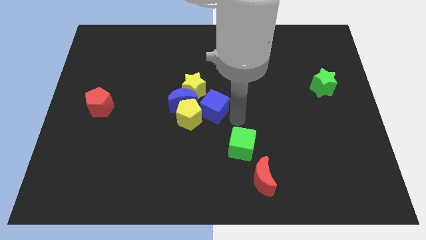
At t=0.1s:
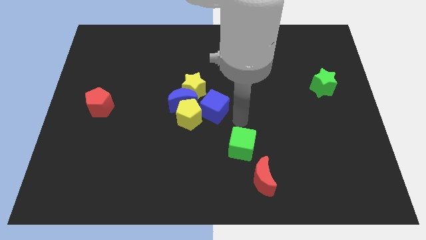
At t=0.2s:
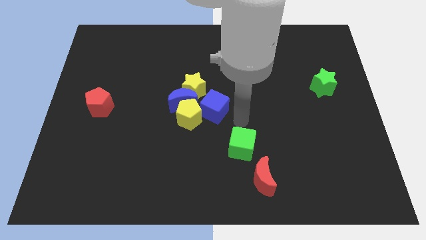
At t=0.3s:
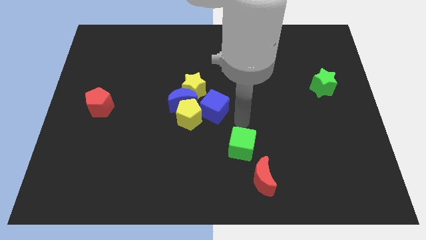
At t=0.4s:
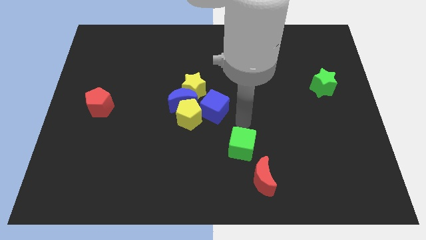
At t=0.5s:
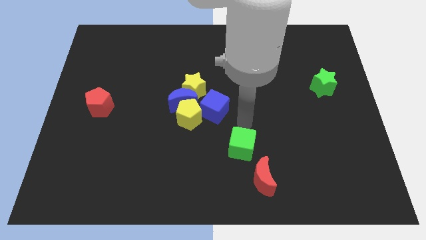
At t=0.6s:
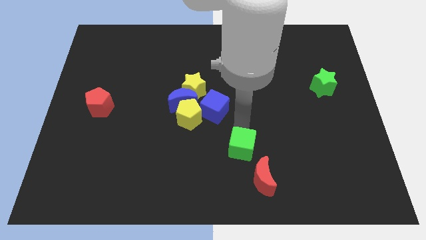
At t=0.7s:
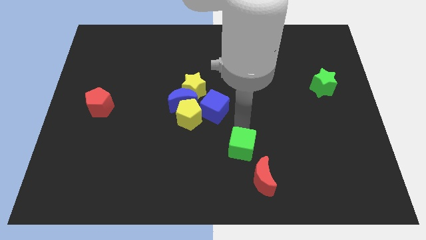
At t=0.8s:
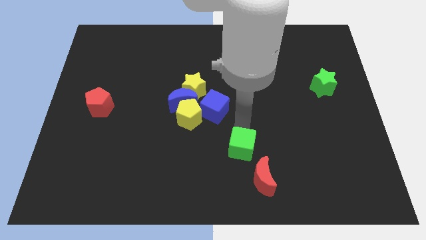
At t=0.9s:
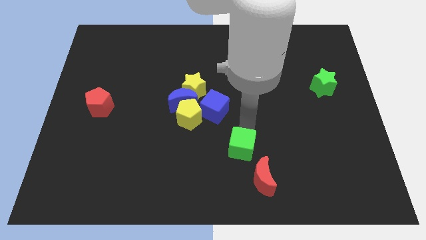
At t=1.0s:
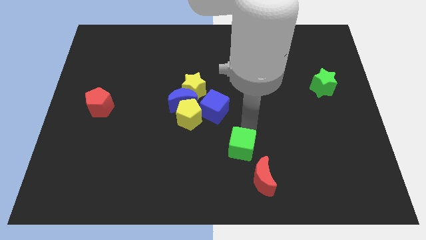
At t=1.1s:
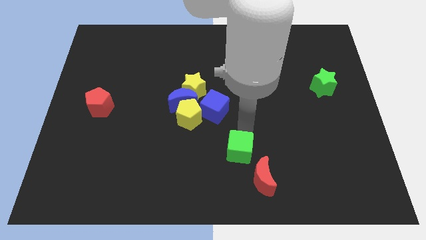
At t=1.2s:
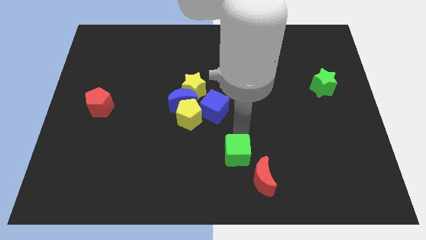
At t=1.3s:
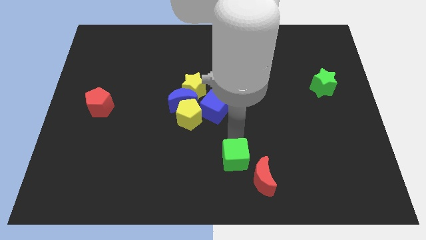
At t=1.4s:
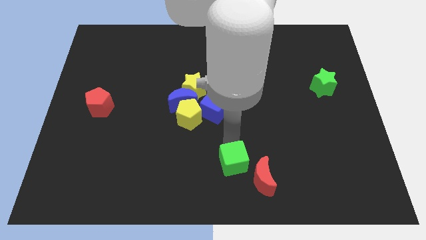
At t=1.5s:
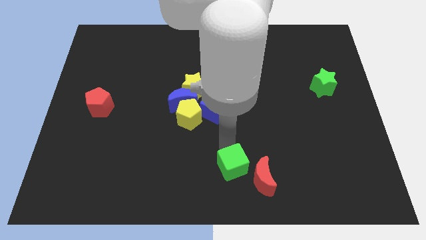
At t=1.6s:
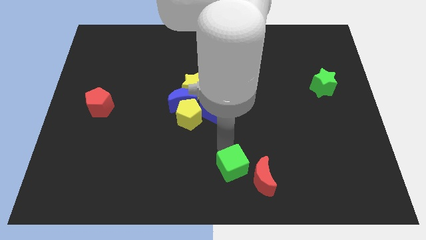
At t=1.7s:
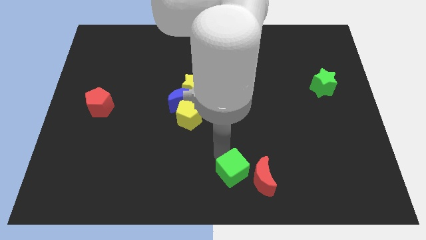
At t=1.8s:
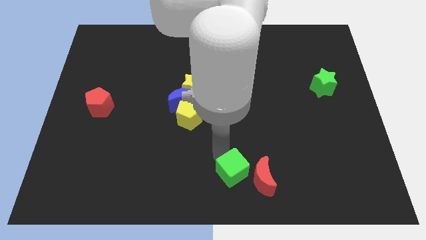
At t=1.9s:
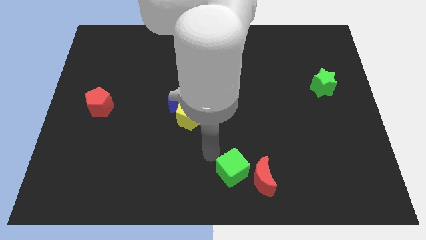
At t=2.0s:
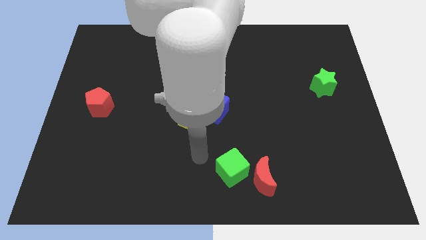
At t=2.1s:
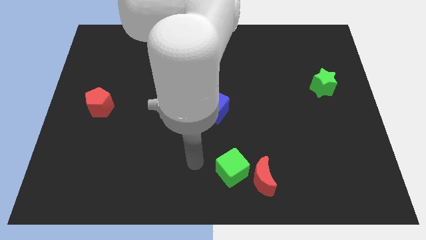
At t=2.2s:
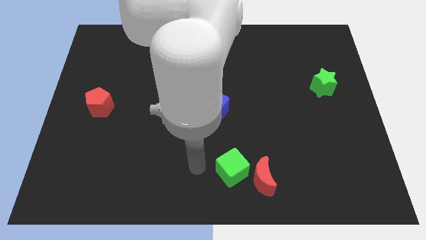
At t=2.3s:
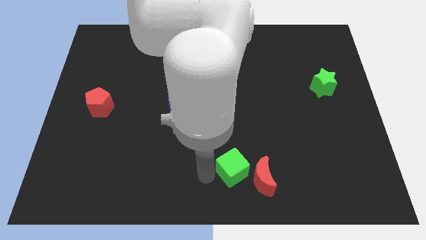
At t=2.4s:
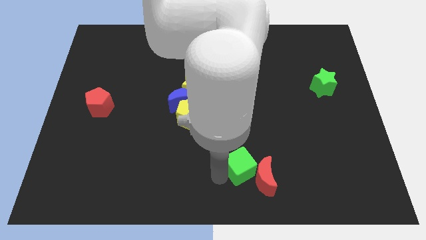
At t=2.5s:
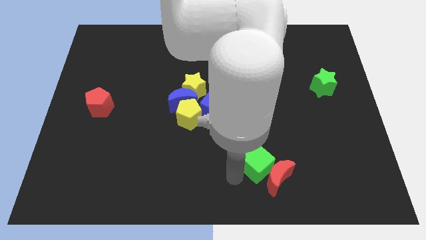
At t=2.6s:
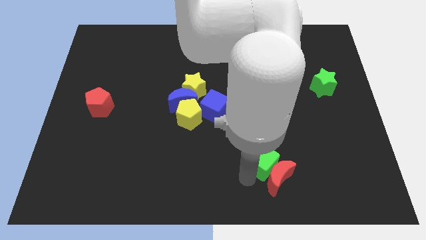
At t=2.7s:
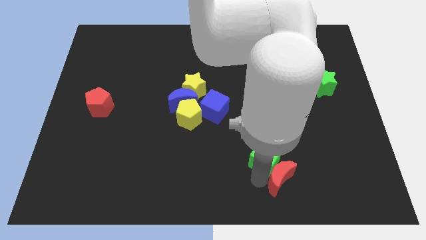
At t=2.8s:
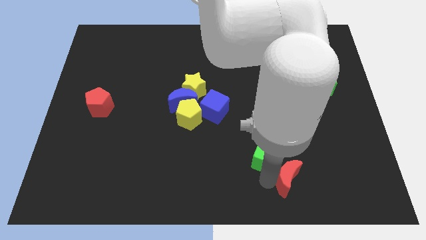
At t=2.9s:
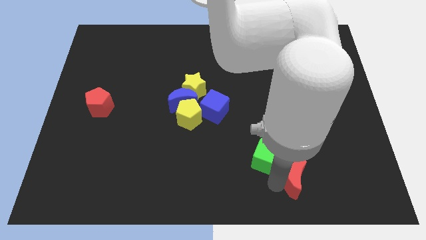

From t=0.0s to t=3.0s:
move the green cube to the top left of the red crescent

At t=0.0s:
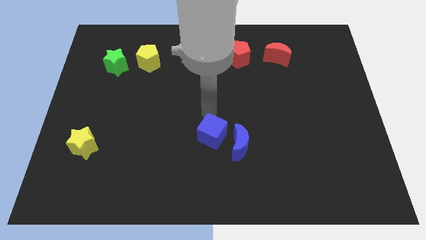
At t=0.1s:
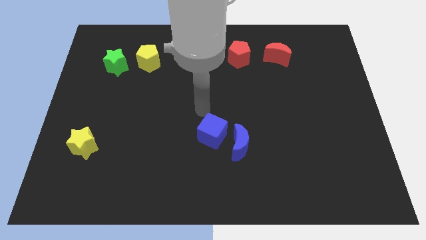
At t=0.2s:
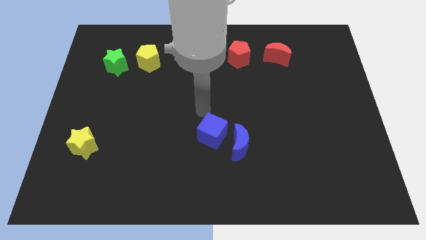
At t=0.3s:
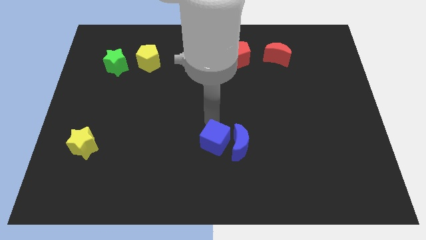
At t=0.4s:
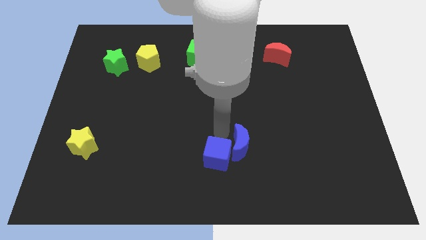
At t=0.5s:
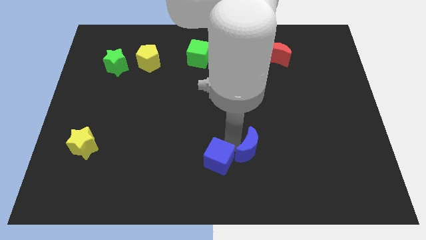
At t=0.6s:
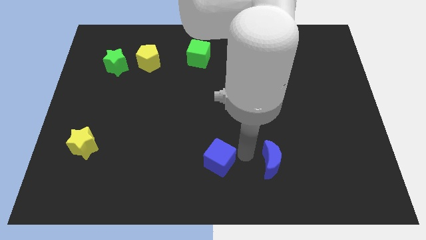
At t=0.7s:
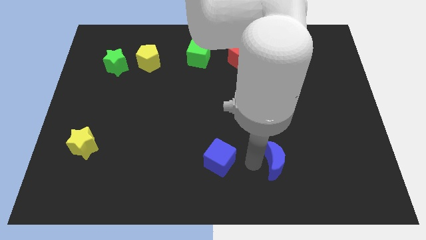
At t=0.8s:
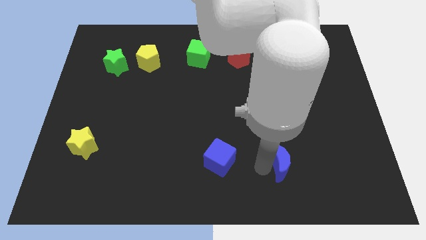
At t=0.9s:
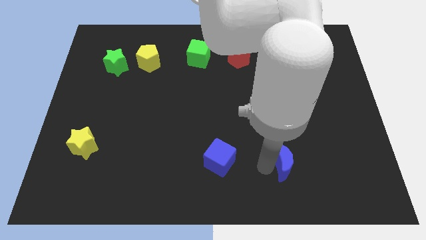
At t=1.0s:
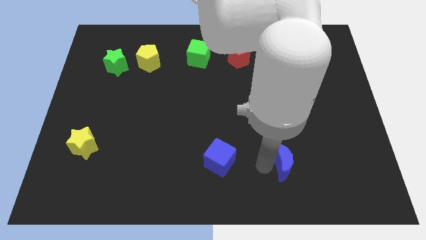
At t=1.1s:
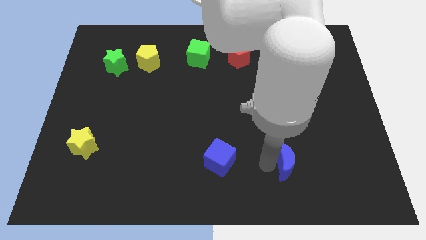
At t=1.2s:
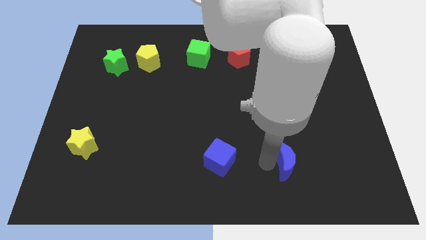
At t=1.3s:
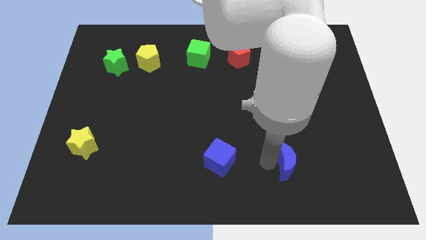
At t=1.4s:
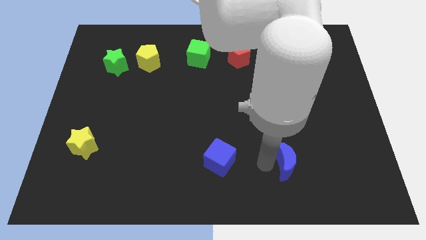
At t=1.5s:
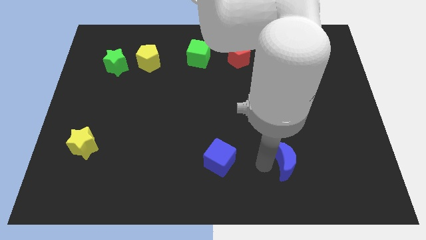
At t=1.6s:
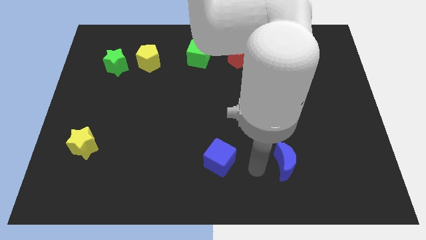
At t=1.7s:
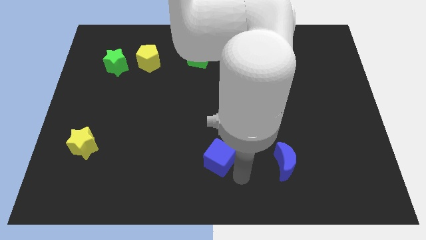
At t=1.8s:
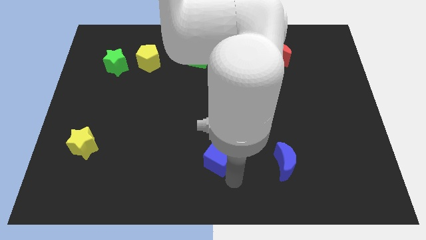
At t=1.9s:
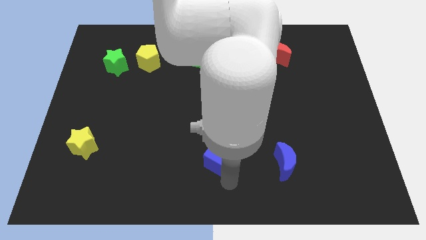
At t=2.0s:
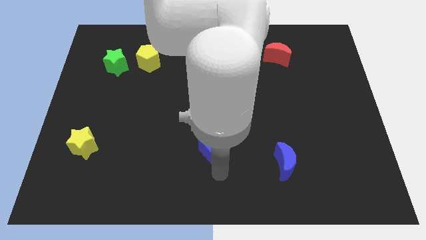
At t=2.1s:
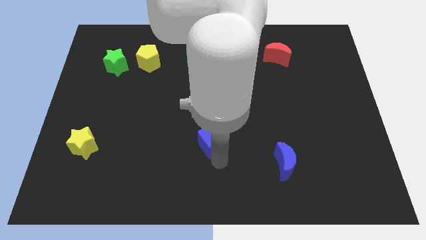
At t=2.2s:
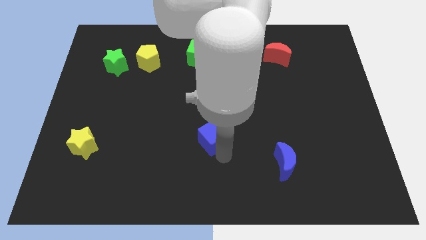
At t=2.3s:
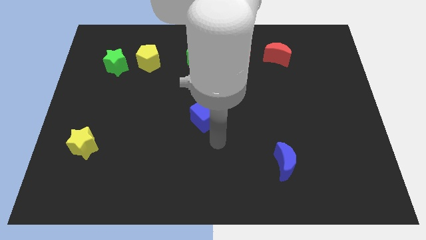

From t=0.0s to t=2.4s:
separate the blue moon from the blue cube

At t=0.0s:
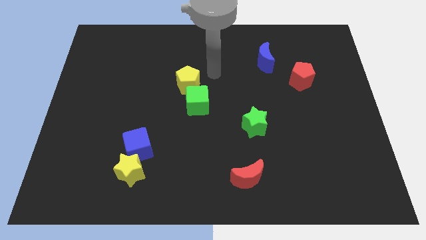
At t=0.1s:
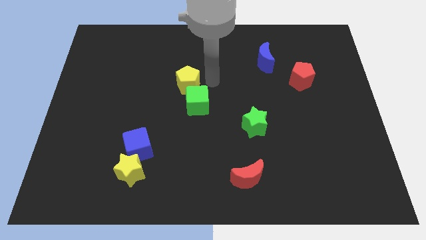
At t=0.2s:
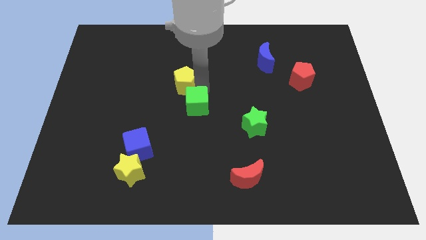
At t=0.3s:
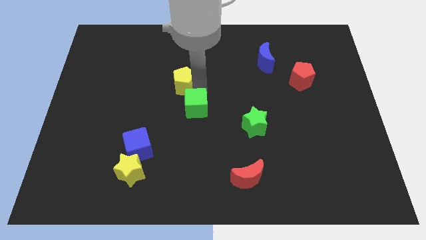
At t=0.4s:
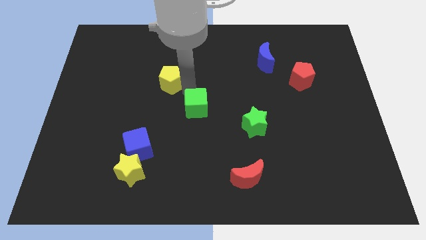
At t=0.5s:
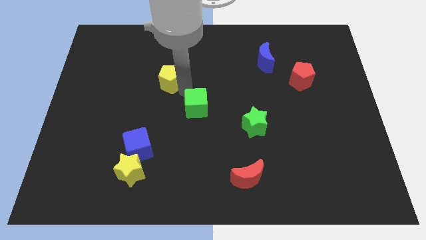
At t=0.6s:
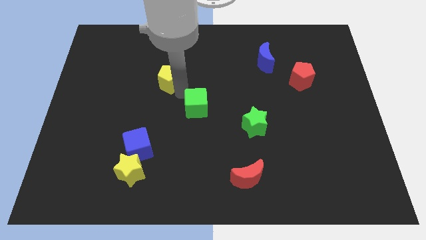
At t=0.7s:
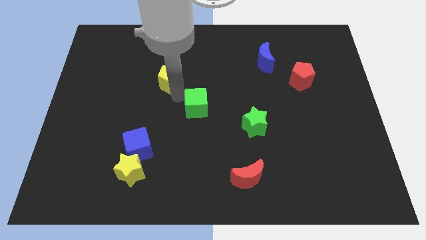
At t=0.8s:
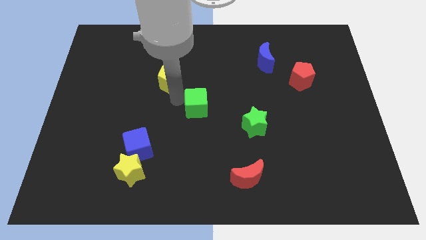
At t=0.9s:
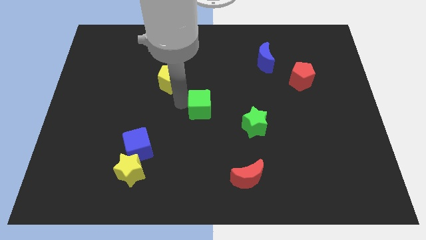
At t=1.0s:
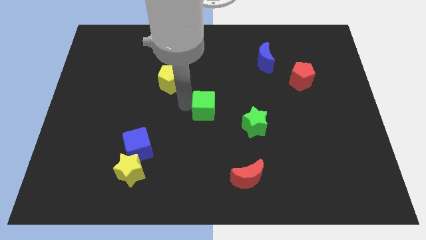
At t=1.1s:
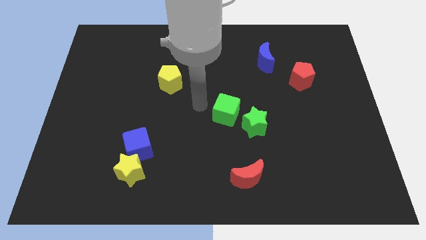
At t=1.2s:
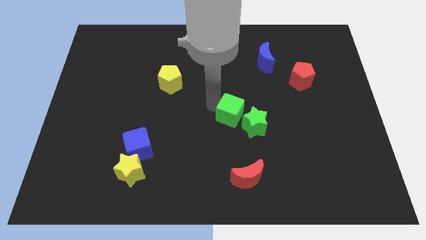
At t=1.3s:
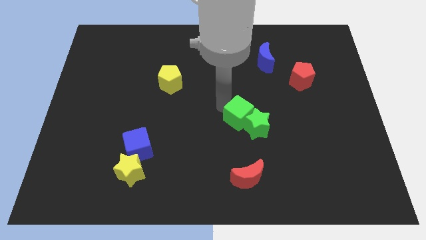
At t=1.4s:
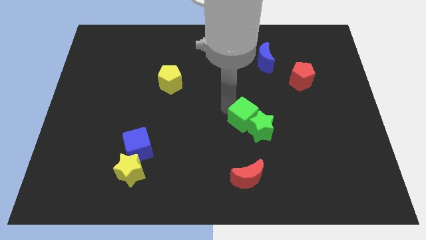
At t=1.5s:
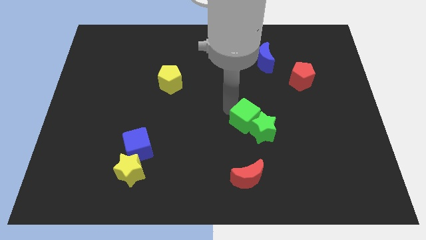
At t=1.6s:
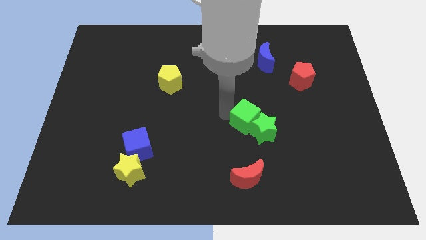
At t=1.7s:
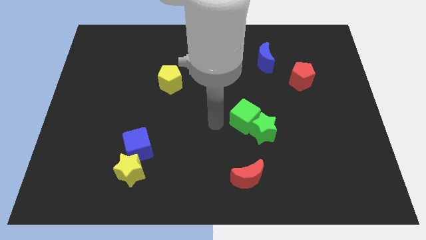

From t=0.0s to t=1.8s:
move the green cube into the green star

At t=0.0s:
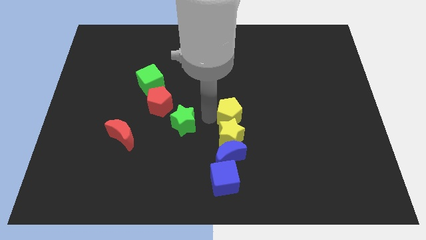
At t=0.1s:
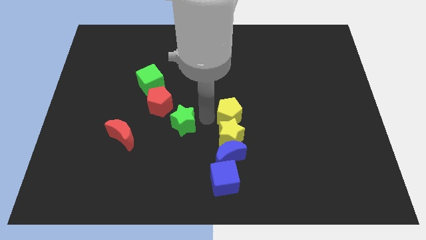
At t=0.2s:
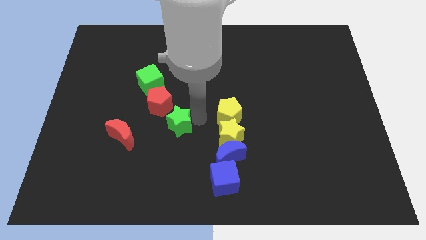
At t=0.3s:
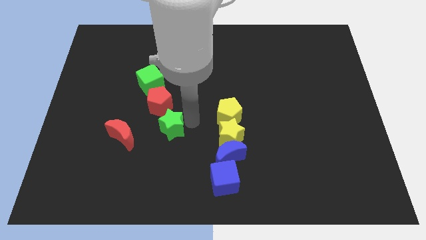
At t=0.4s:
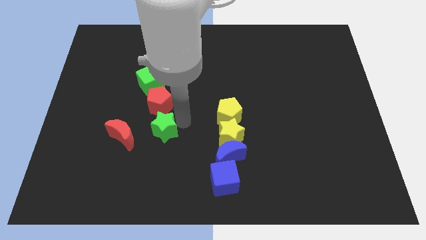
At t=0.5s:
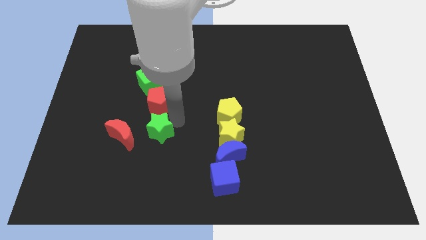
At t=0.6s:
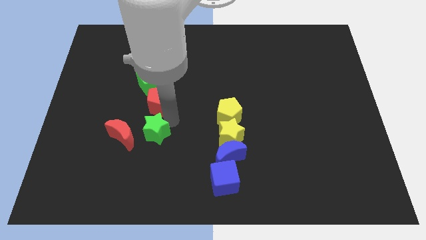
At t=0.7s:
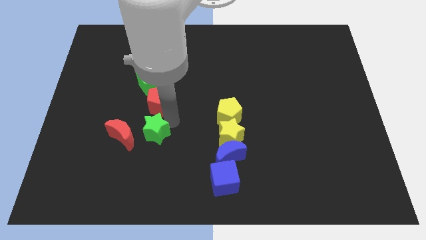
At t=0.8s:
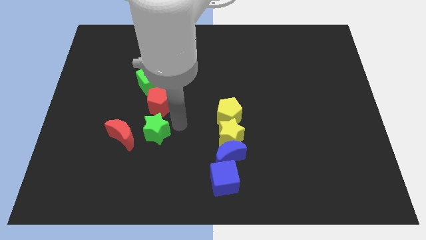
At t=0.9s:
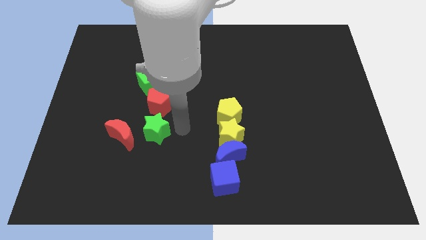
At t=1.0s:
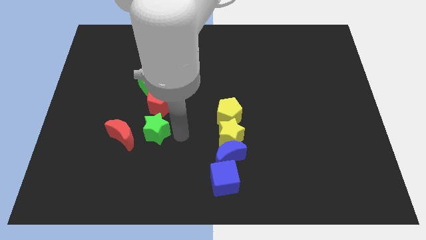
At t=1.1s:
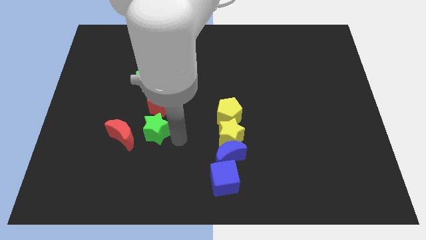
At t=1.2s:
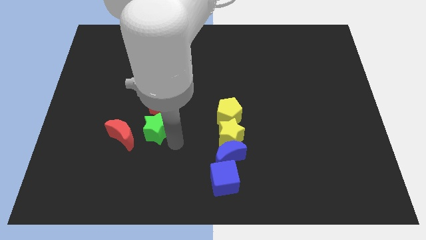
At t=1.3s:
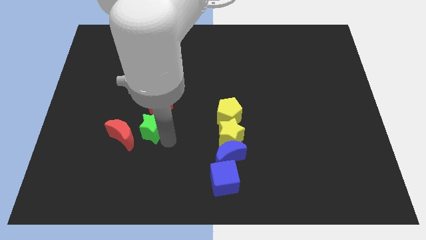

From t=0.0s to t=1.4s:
push the green star to the bottom of the red pentagon

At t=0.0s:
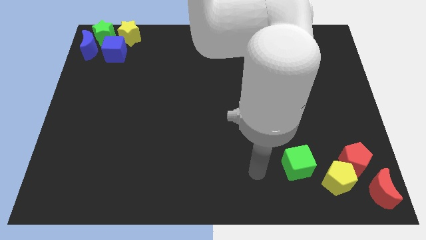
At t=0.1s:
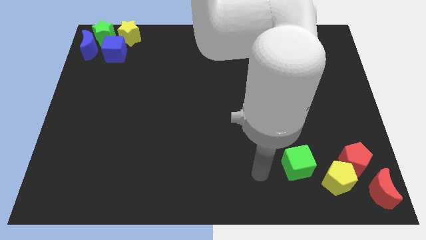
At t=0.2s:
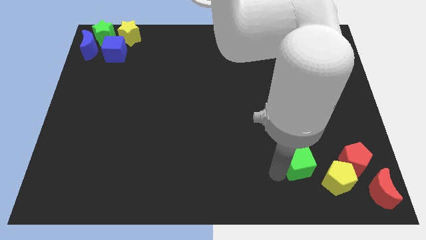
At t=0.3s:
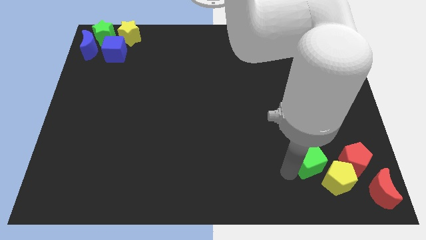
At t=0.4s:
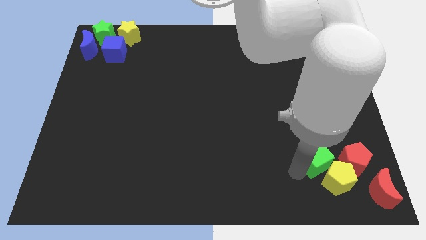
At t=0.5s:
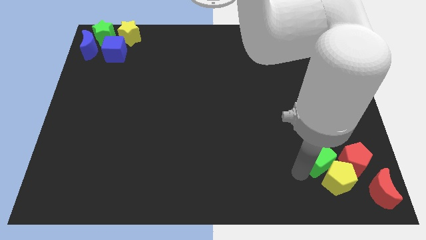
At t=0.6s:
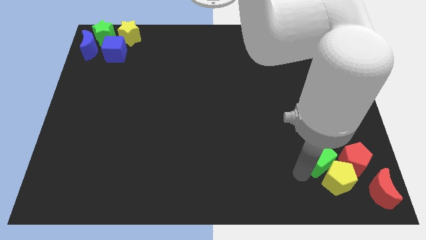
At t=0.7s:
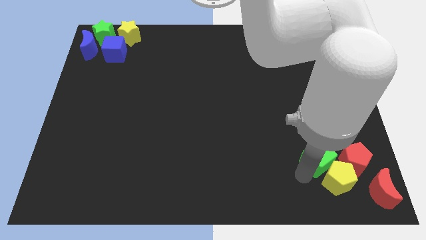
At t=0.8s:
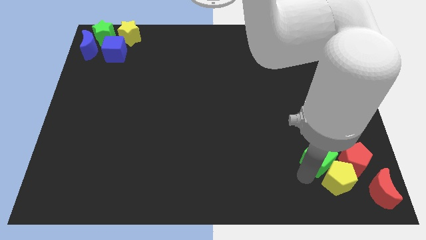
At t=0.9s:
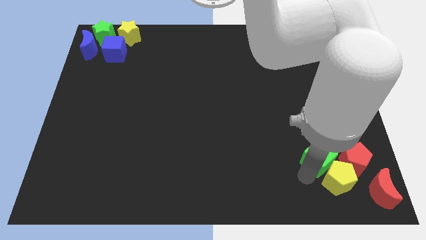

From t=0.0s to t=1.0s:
place green cube to the left of red pentagon
